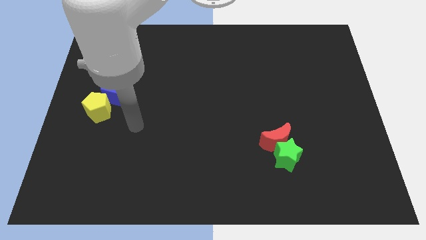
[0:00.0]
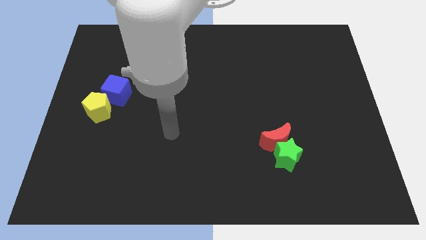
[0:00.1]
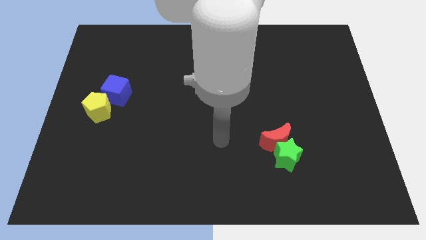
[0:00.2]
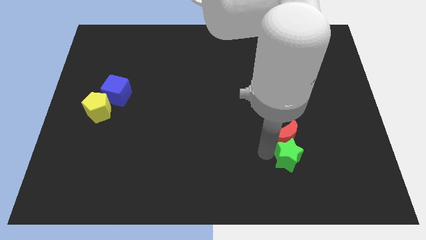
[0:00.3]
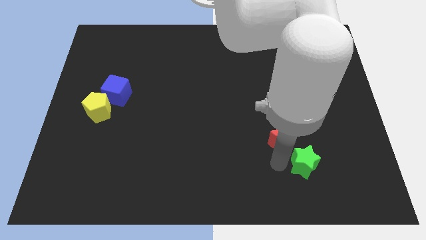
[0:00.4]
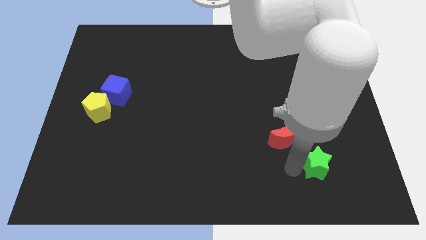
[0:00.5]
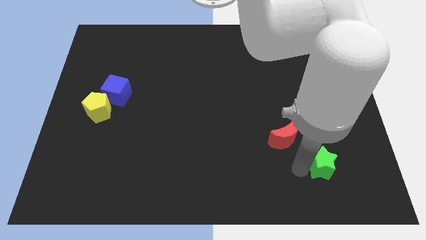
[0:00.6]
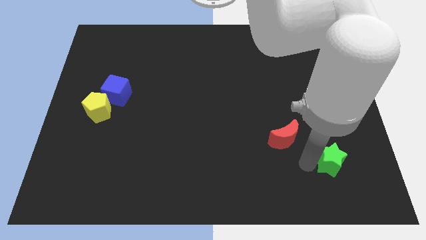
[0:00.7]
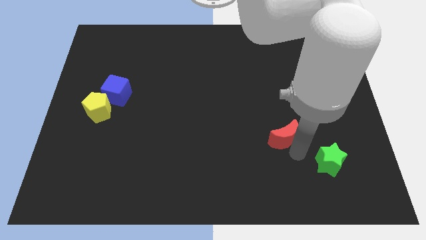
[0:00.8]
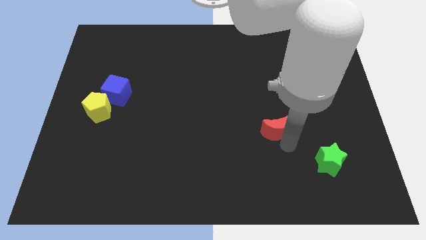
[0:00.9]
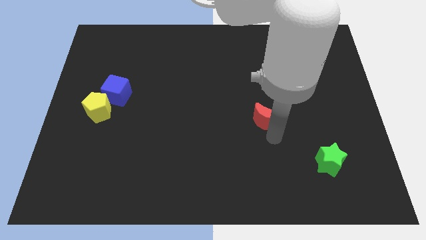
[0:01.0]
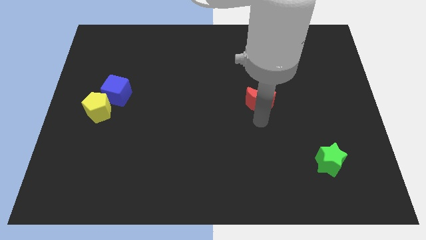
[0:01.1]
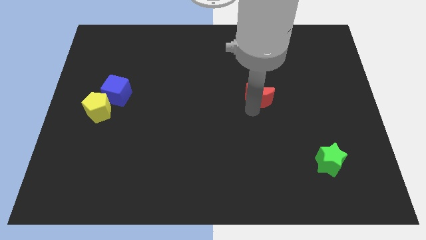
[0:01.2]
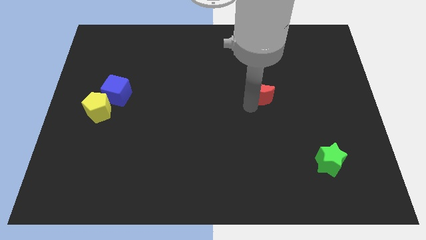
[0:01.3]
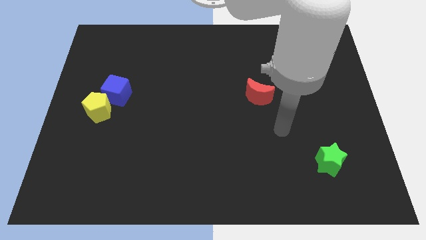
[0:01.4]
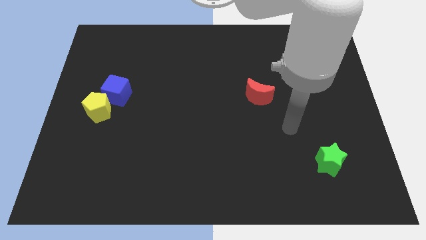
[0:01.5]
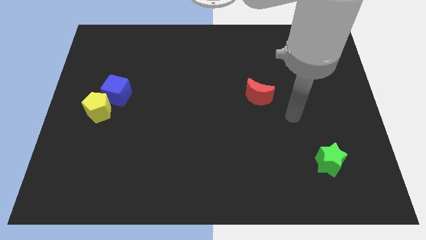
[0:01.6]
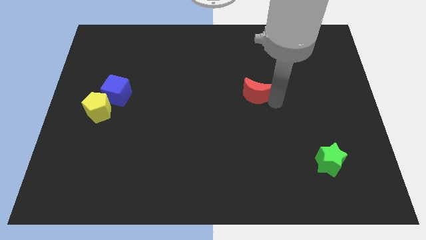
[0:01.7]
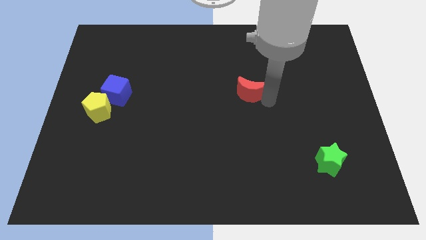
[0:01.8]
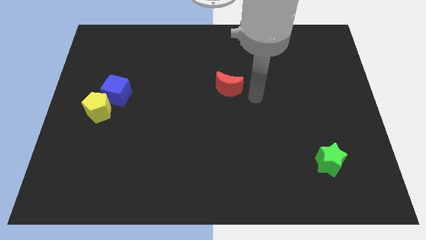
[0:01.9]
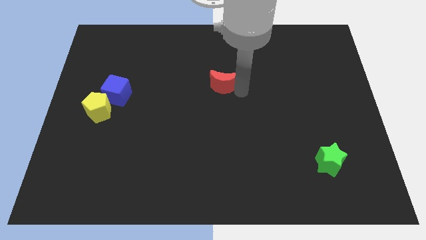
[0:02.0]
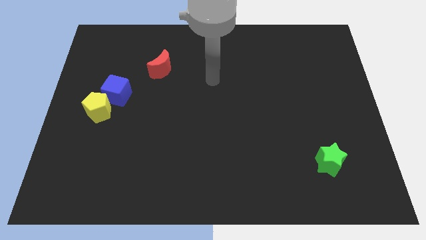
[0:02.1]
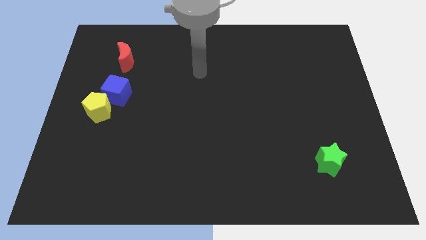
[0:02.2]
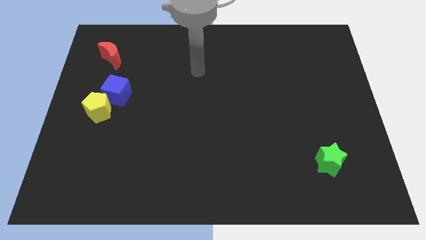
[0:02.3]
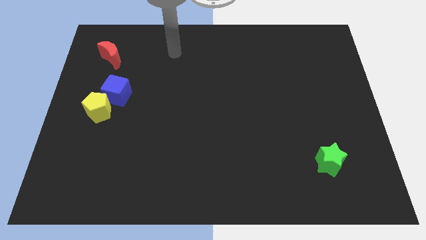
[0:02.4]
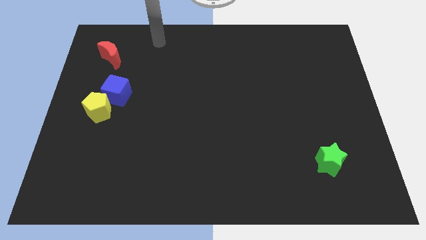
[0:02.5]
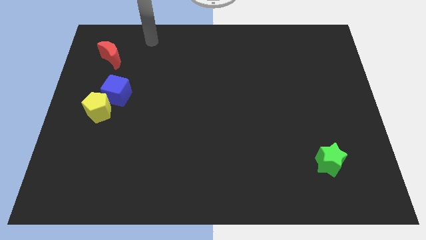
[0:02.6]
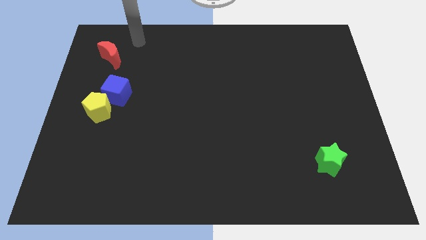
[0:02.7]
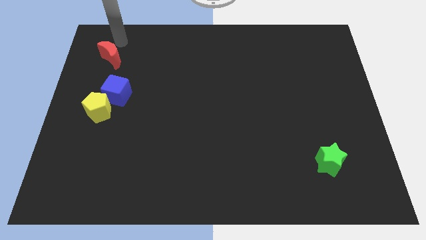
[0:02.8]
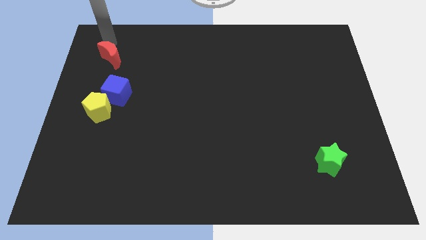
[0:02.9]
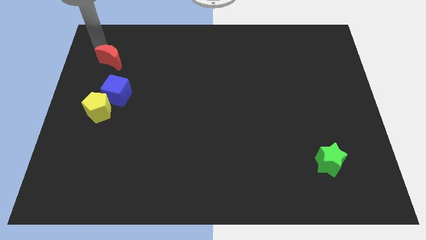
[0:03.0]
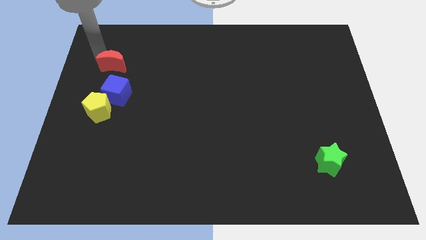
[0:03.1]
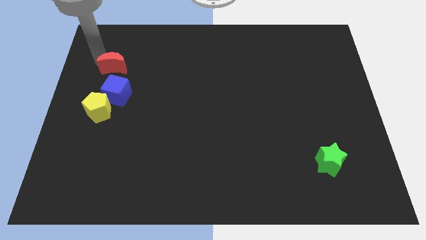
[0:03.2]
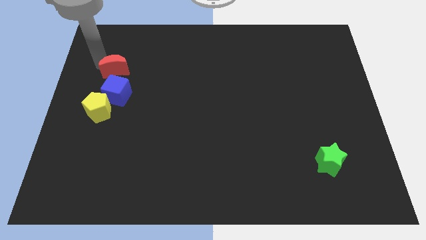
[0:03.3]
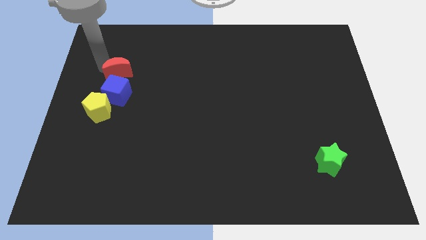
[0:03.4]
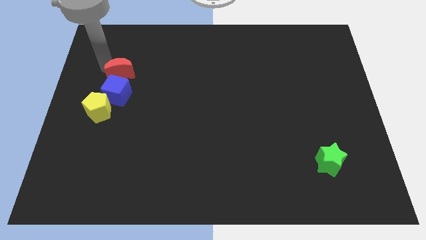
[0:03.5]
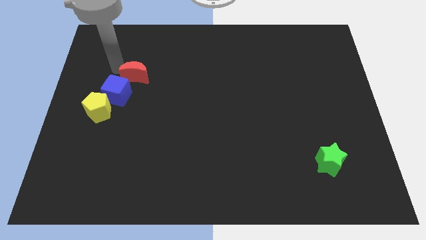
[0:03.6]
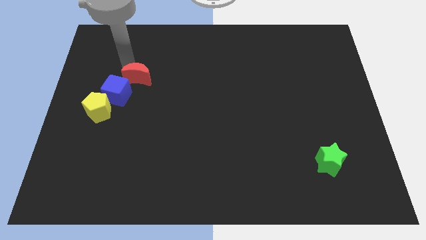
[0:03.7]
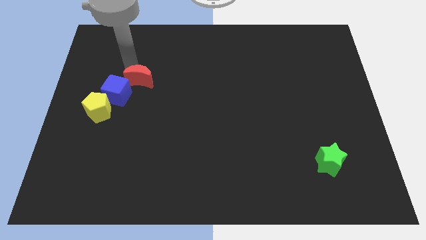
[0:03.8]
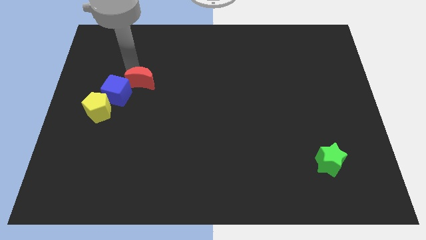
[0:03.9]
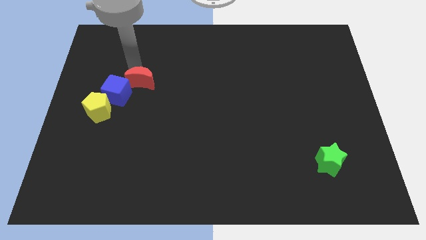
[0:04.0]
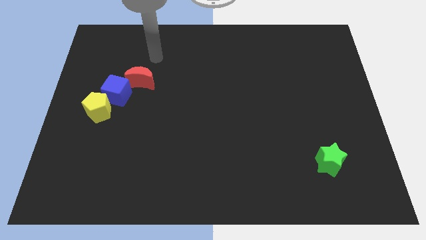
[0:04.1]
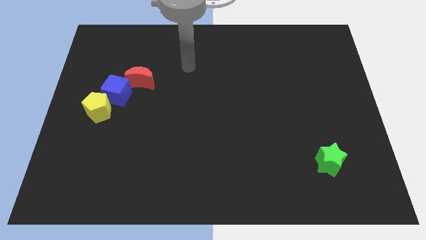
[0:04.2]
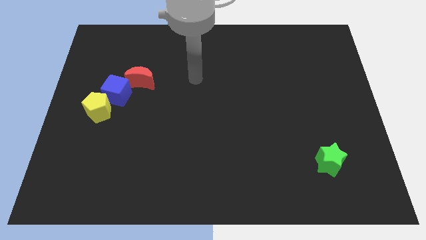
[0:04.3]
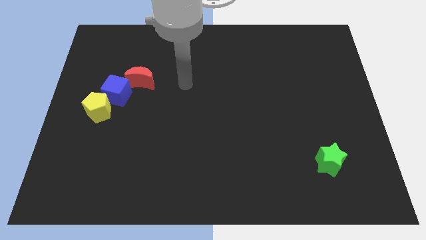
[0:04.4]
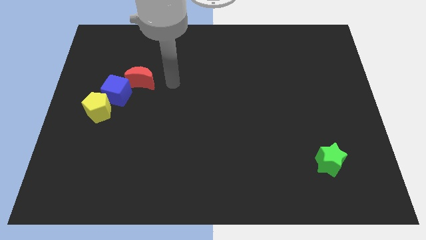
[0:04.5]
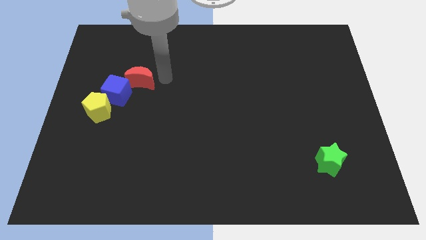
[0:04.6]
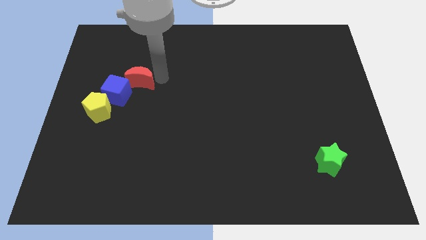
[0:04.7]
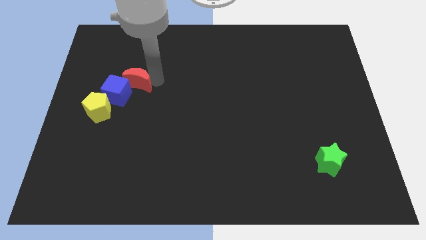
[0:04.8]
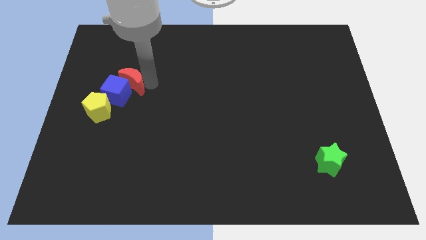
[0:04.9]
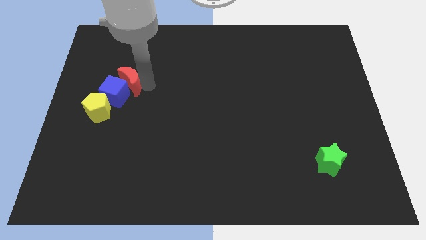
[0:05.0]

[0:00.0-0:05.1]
put the red block close to the blue cube

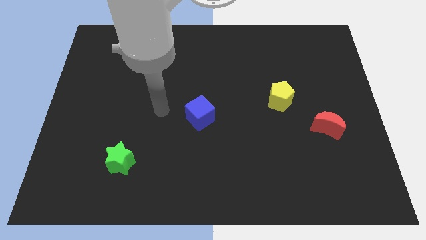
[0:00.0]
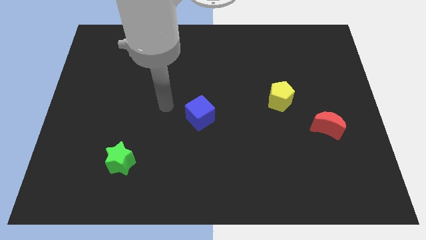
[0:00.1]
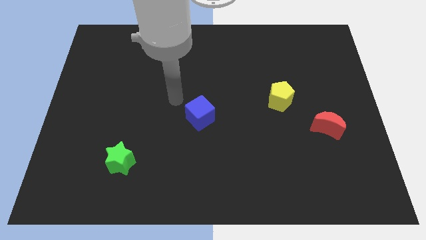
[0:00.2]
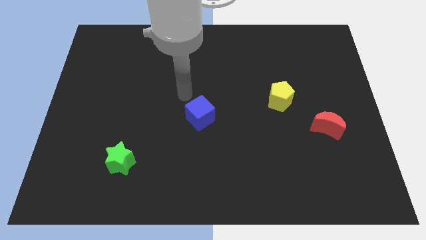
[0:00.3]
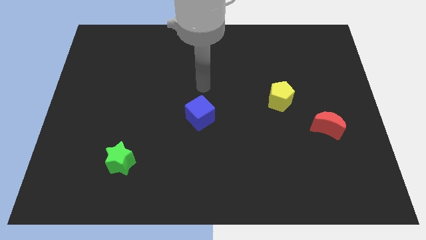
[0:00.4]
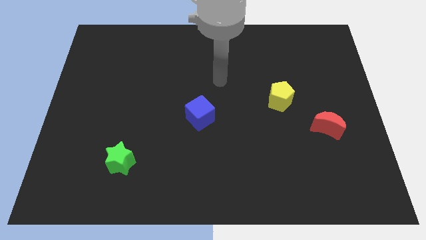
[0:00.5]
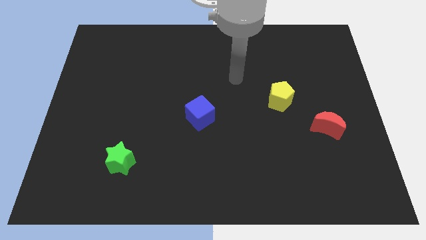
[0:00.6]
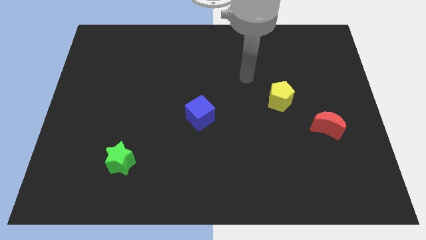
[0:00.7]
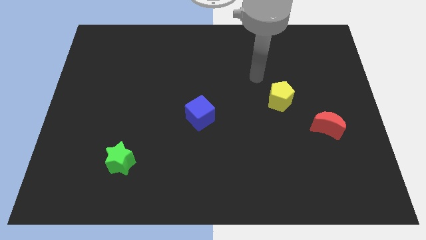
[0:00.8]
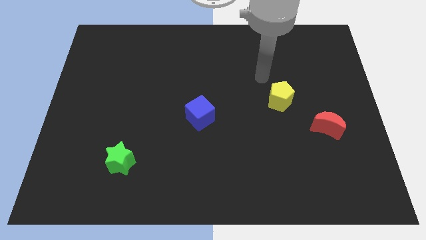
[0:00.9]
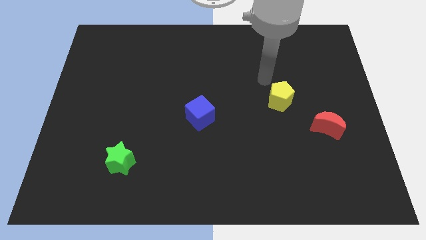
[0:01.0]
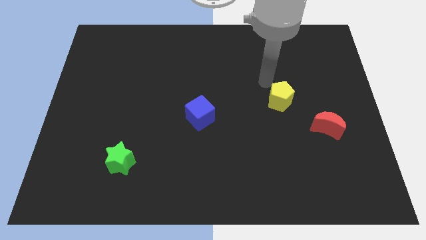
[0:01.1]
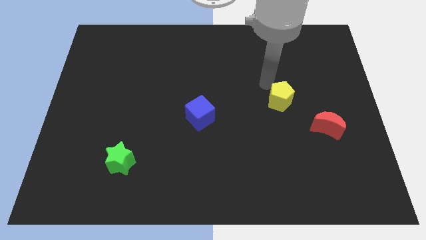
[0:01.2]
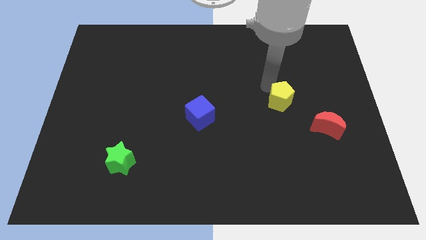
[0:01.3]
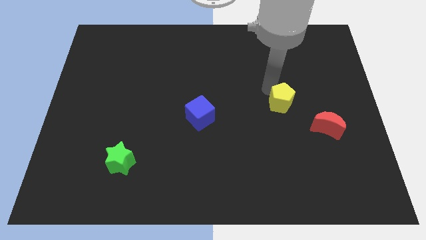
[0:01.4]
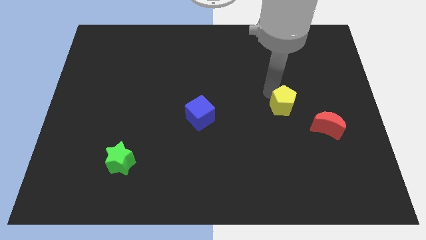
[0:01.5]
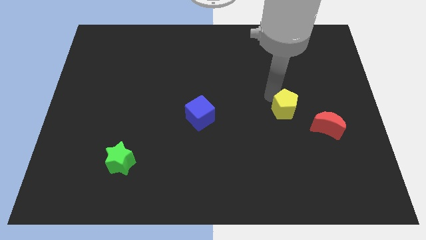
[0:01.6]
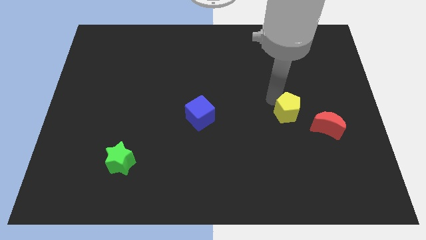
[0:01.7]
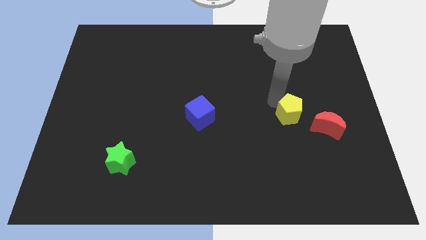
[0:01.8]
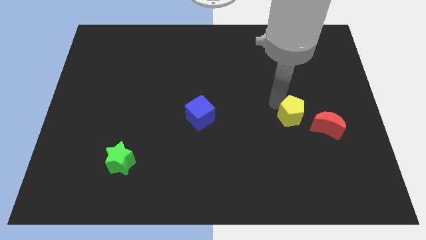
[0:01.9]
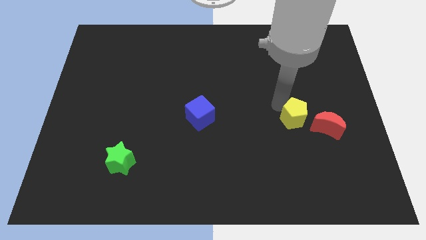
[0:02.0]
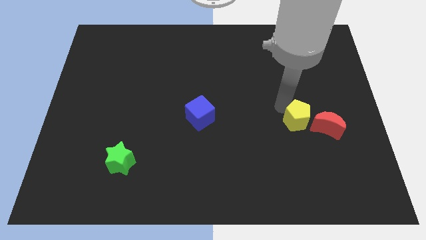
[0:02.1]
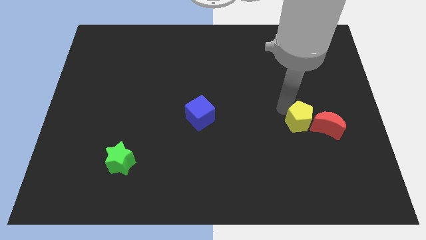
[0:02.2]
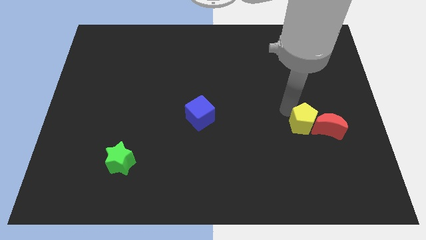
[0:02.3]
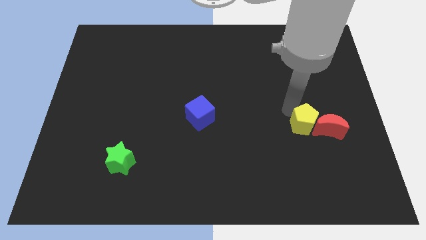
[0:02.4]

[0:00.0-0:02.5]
push the yellow block to the moon
